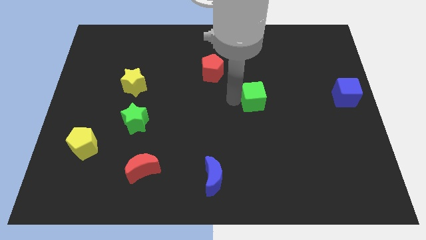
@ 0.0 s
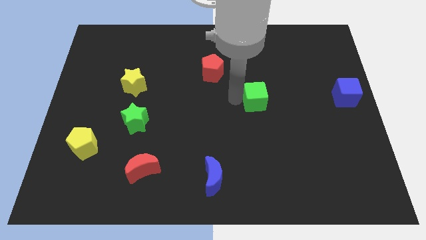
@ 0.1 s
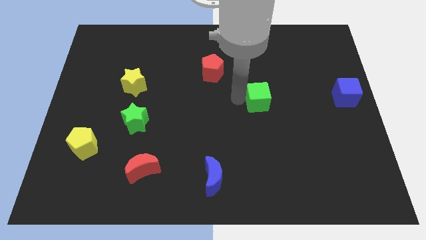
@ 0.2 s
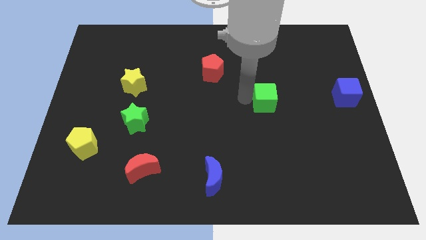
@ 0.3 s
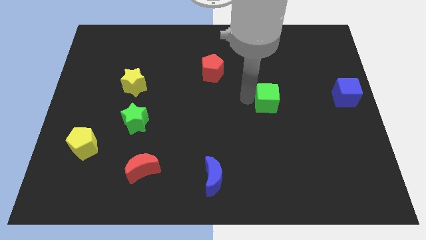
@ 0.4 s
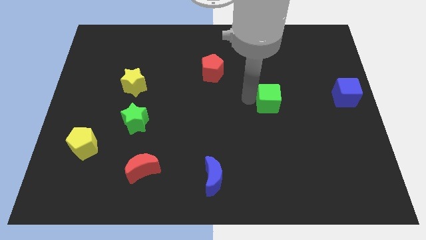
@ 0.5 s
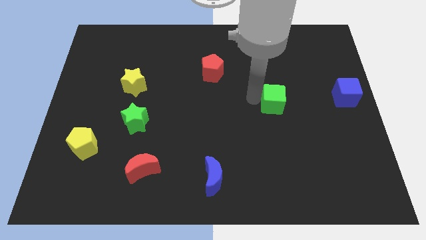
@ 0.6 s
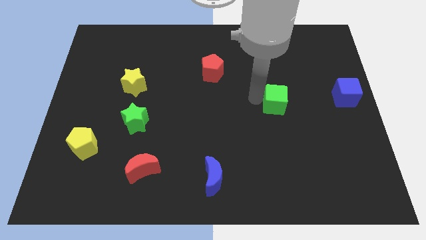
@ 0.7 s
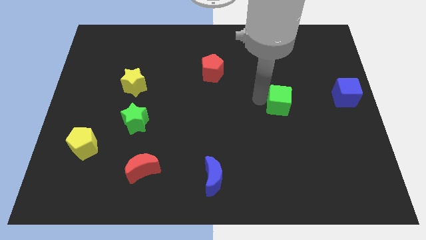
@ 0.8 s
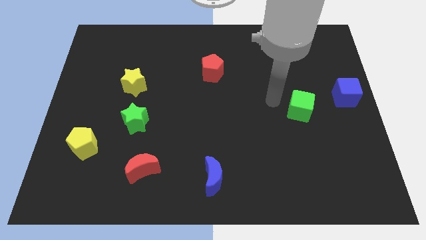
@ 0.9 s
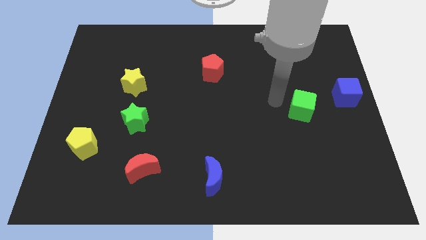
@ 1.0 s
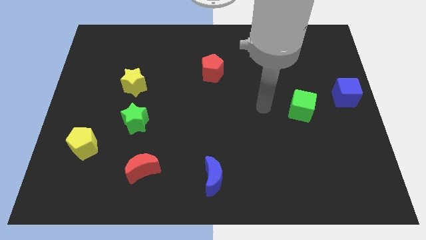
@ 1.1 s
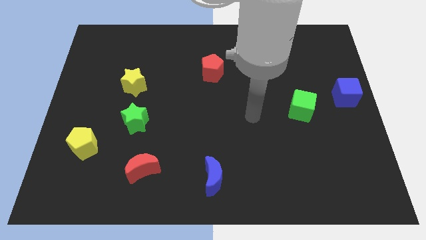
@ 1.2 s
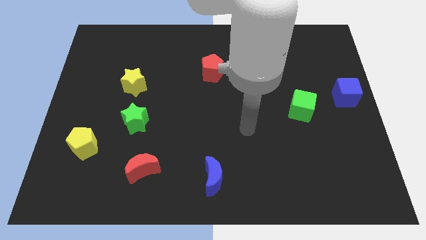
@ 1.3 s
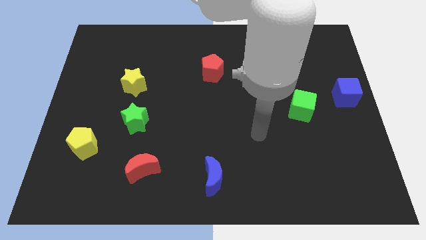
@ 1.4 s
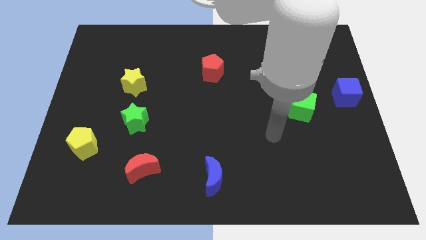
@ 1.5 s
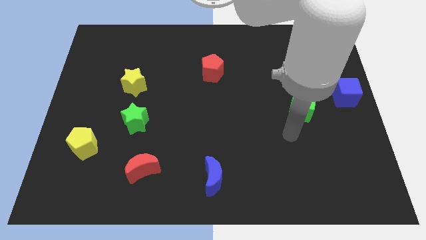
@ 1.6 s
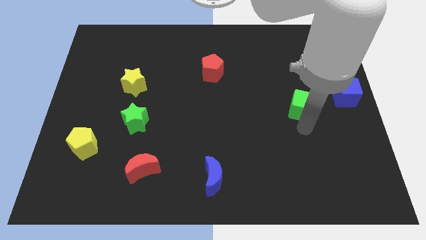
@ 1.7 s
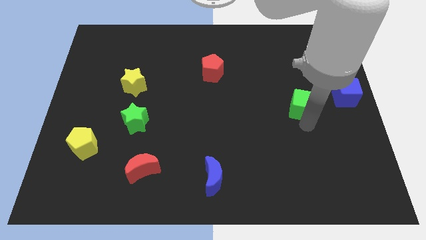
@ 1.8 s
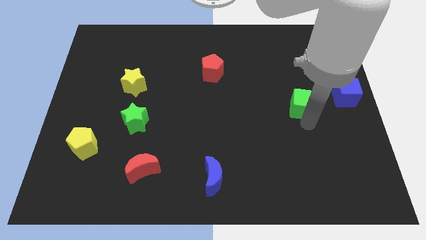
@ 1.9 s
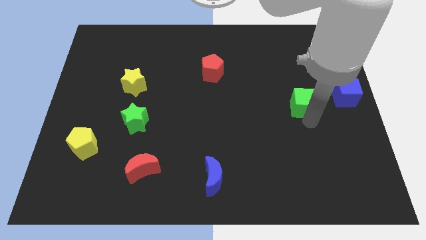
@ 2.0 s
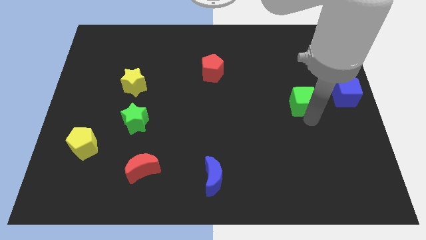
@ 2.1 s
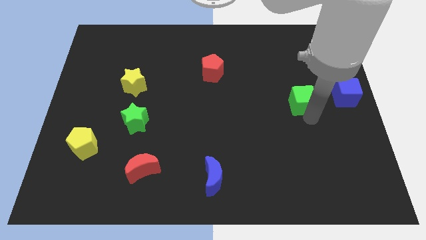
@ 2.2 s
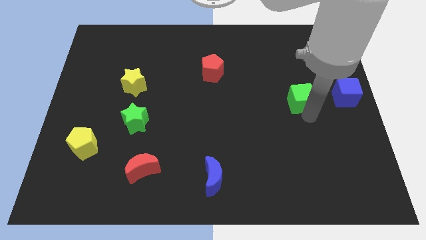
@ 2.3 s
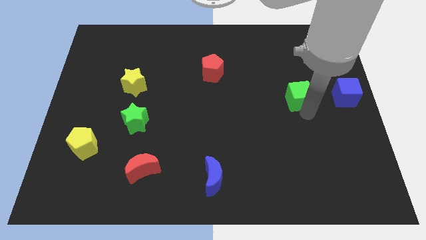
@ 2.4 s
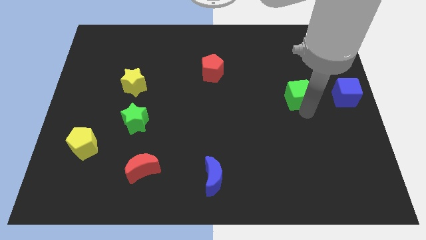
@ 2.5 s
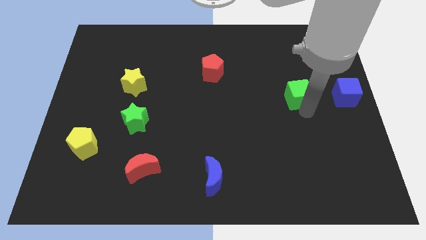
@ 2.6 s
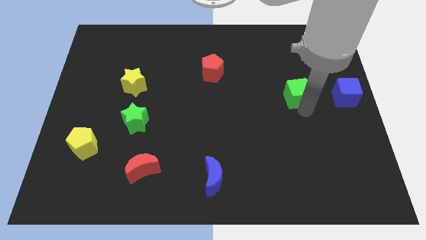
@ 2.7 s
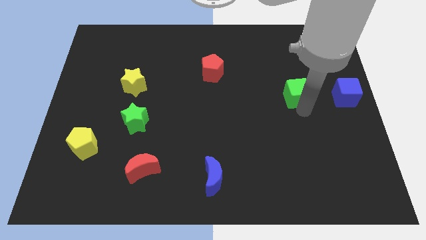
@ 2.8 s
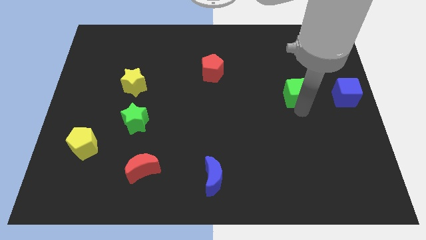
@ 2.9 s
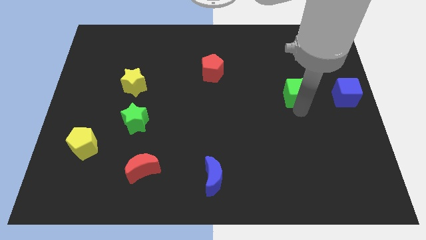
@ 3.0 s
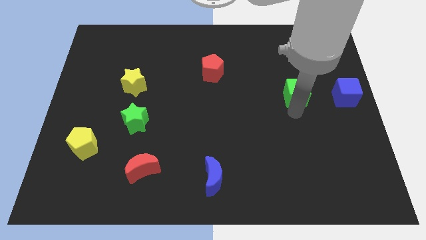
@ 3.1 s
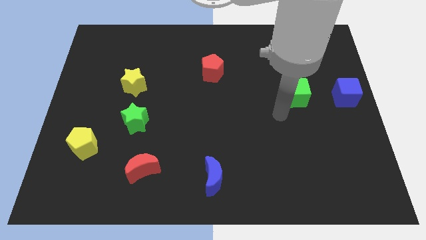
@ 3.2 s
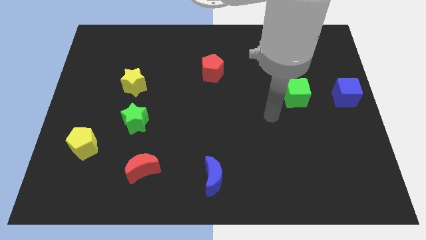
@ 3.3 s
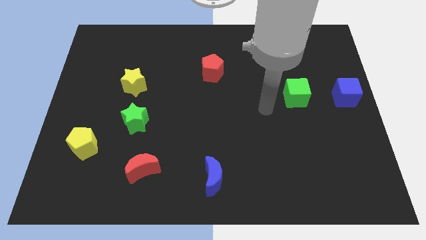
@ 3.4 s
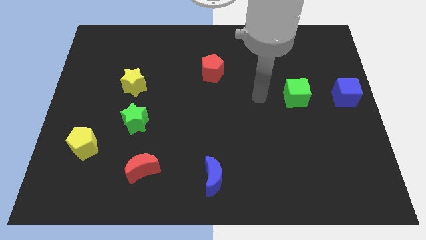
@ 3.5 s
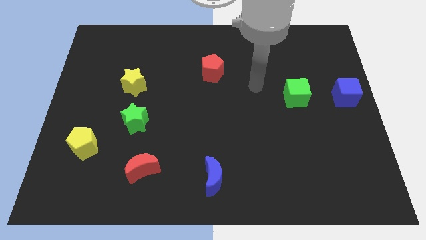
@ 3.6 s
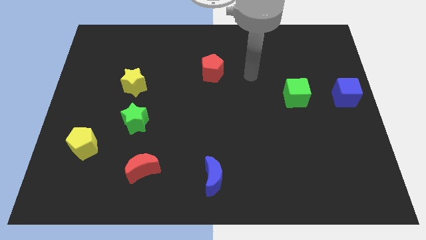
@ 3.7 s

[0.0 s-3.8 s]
make the green cube parallel to blue cube

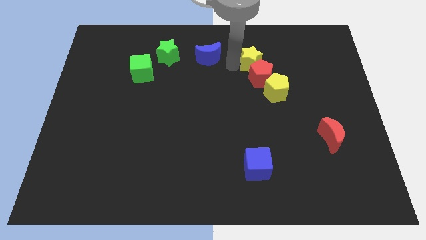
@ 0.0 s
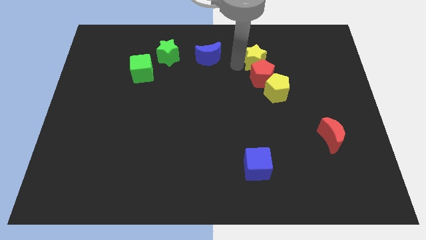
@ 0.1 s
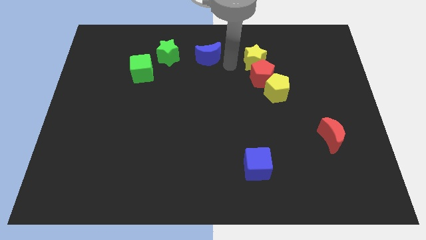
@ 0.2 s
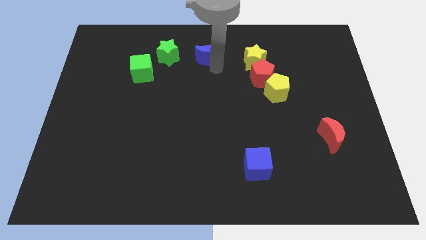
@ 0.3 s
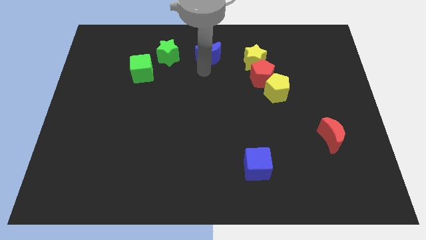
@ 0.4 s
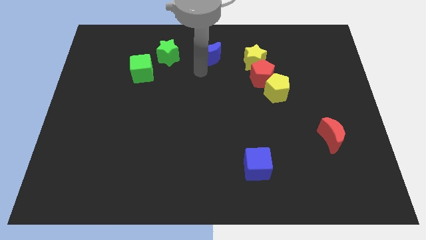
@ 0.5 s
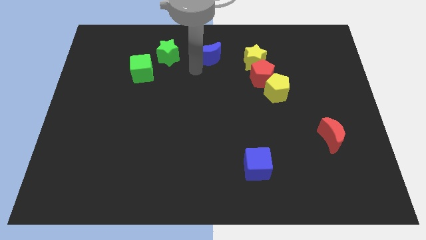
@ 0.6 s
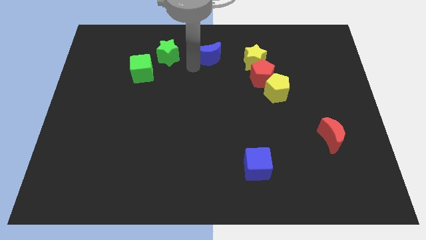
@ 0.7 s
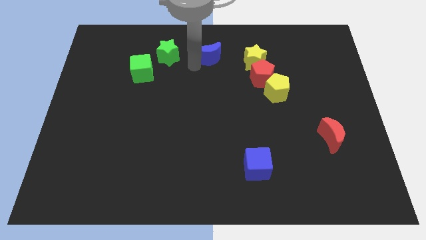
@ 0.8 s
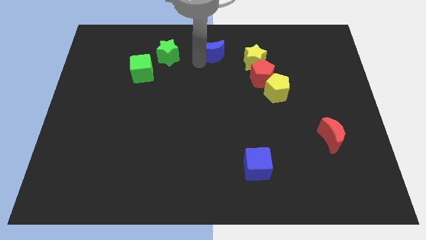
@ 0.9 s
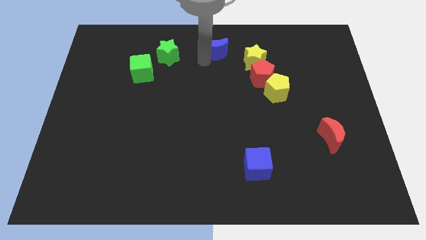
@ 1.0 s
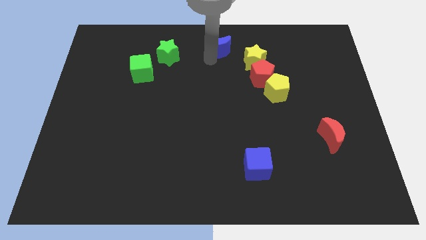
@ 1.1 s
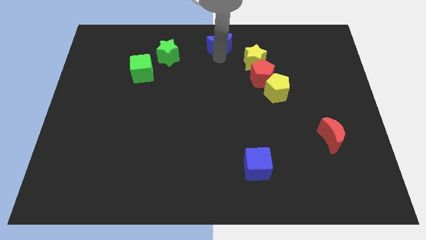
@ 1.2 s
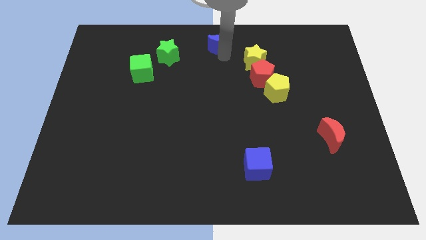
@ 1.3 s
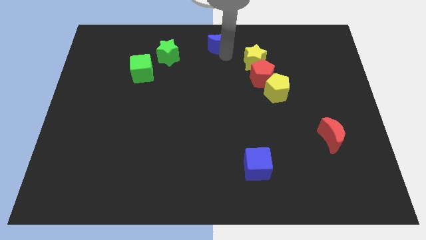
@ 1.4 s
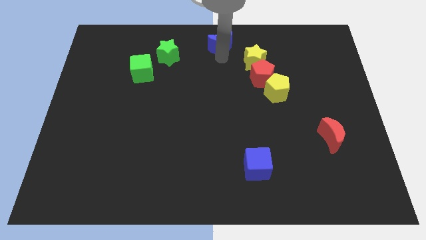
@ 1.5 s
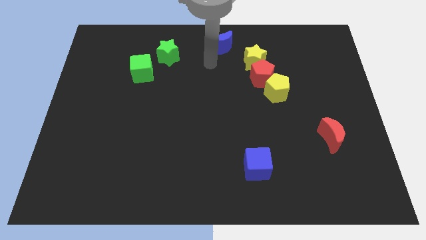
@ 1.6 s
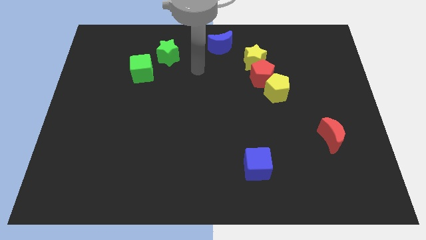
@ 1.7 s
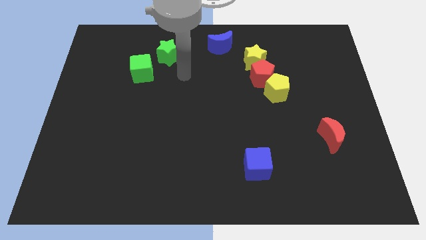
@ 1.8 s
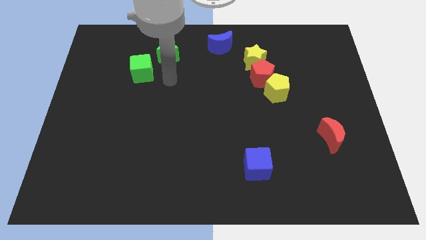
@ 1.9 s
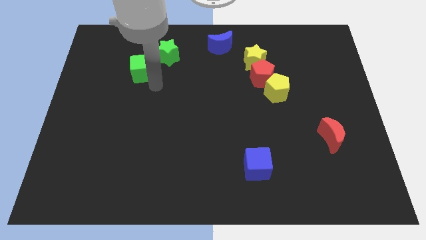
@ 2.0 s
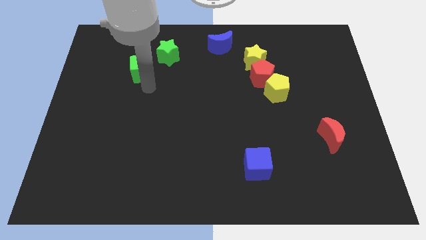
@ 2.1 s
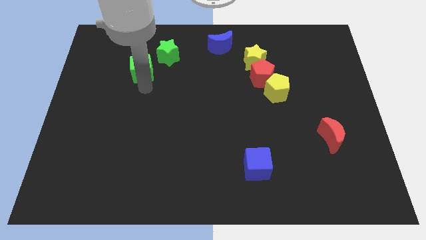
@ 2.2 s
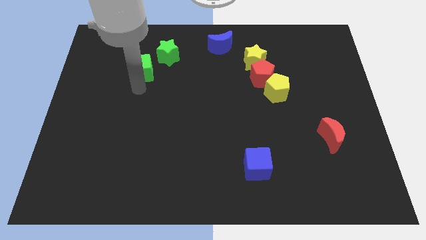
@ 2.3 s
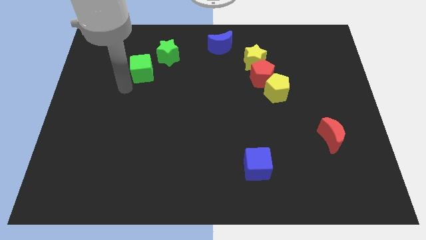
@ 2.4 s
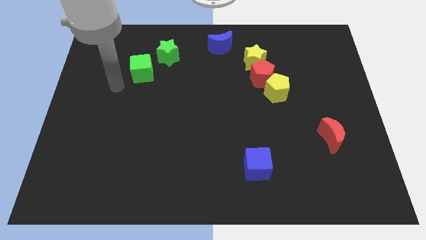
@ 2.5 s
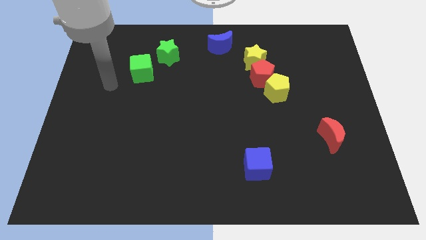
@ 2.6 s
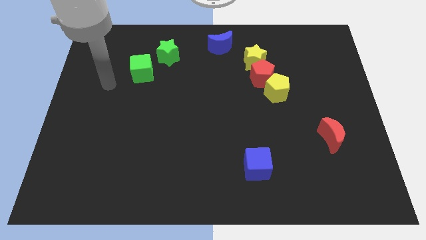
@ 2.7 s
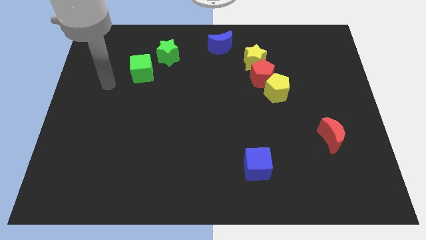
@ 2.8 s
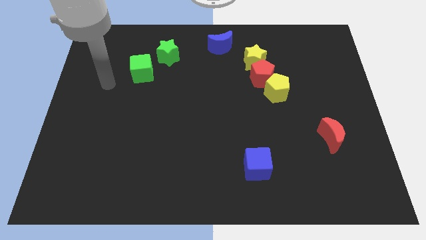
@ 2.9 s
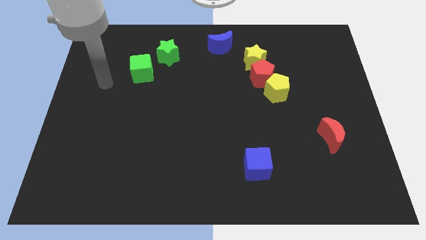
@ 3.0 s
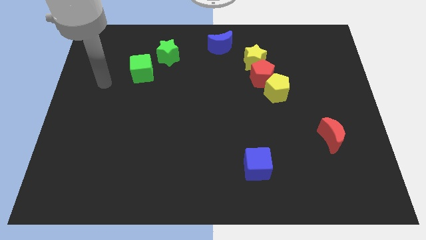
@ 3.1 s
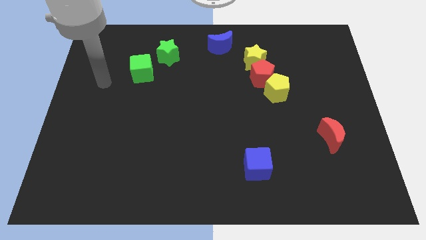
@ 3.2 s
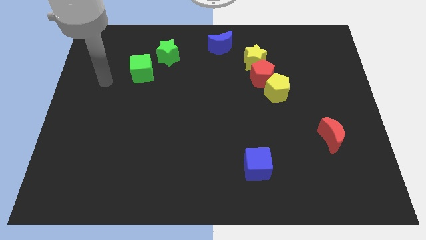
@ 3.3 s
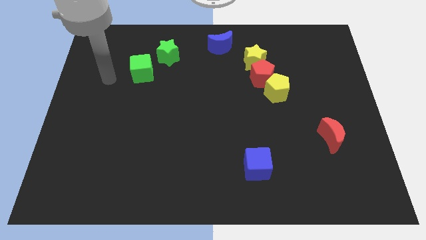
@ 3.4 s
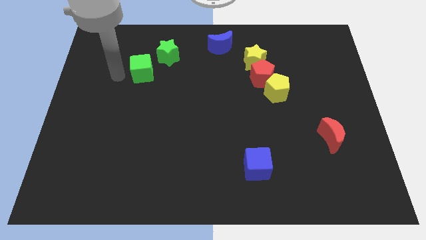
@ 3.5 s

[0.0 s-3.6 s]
place your hand at left side of the green cube

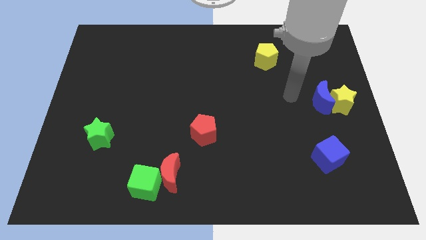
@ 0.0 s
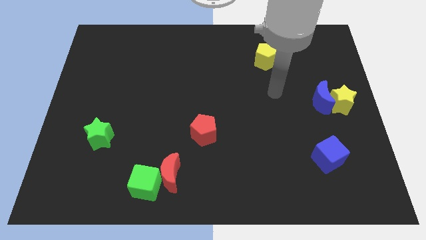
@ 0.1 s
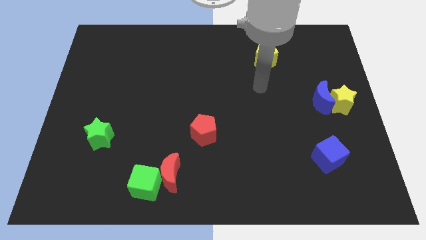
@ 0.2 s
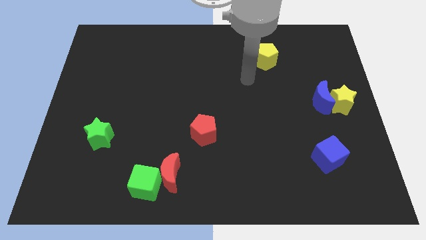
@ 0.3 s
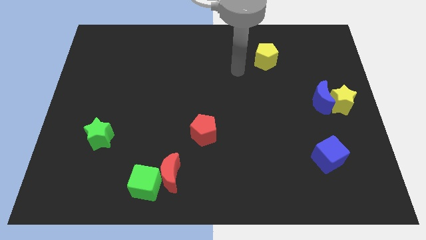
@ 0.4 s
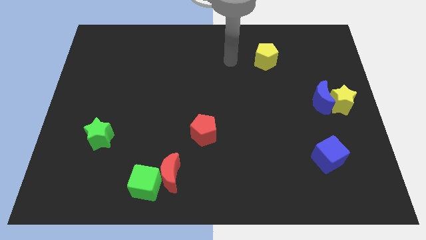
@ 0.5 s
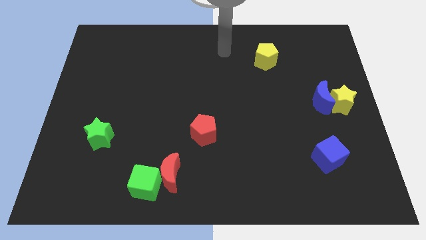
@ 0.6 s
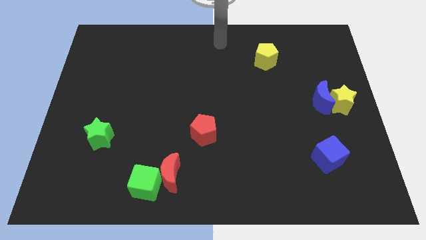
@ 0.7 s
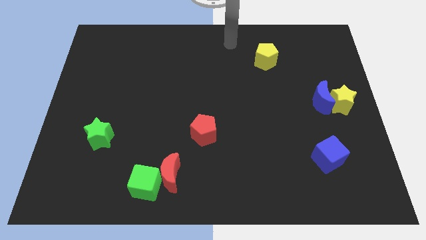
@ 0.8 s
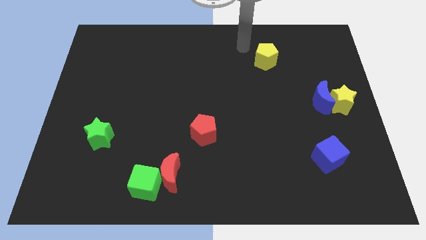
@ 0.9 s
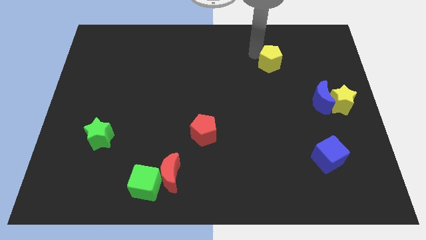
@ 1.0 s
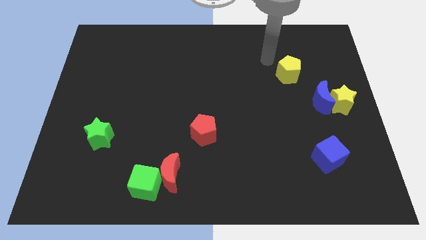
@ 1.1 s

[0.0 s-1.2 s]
place your arm near the yellow pentagon

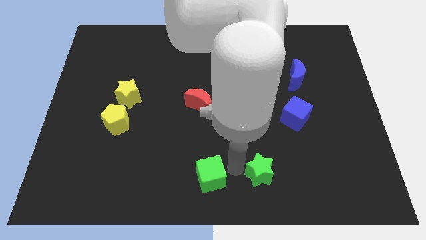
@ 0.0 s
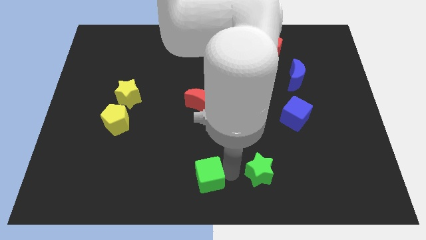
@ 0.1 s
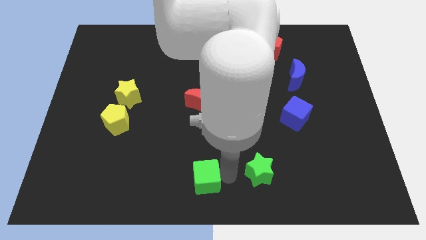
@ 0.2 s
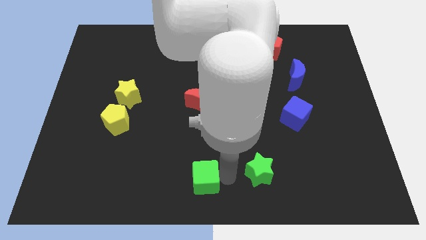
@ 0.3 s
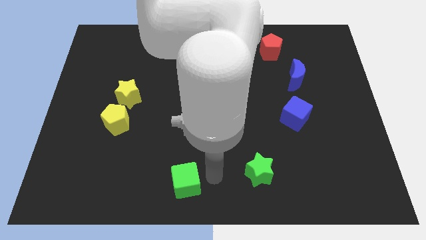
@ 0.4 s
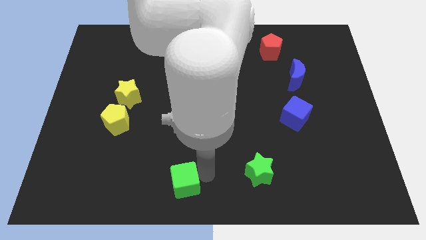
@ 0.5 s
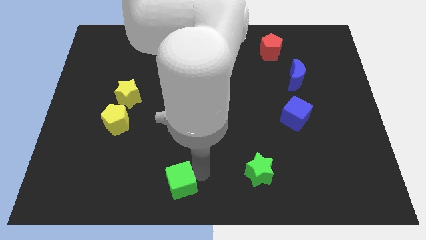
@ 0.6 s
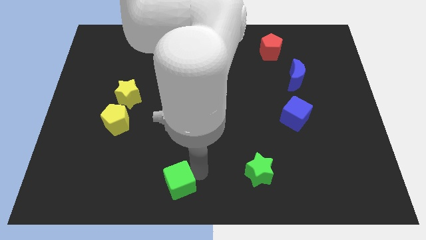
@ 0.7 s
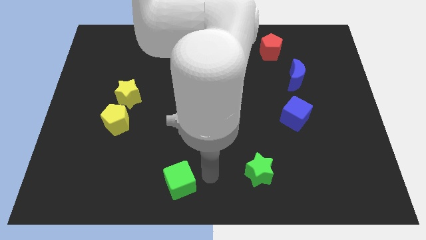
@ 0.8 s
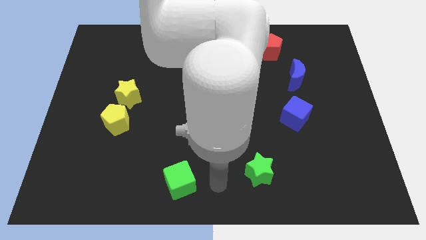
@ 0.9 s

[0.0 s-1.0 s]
move the green cube to the left of the board
